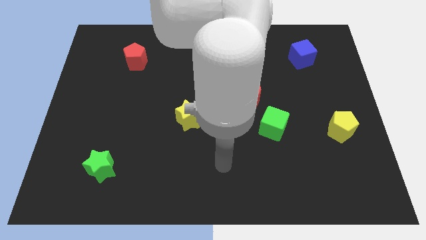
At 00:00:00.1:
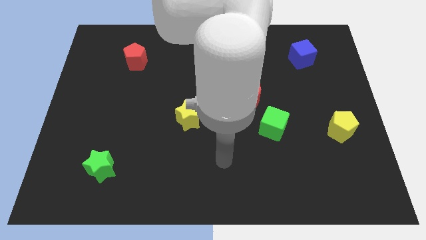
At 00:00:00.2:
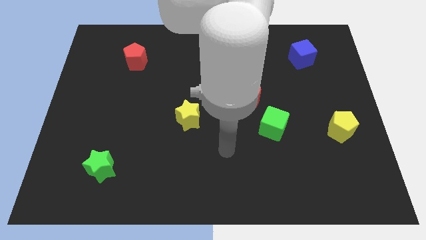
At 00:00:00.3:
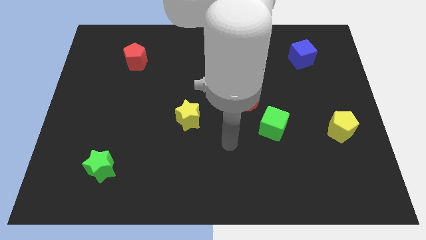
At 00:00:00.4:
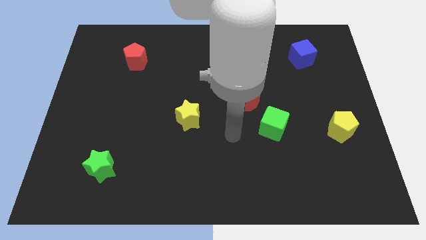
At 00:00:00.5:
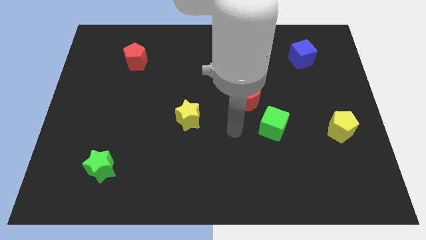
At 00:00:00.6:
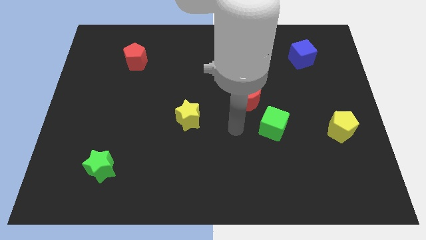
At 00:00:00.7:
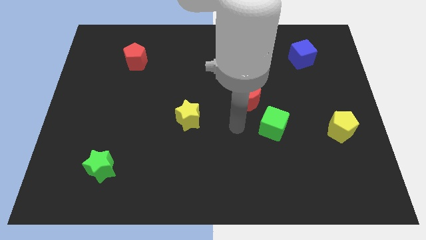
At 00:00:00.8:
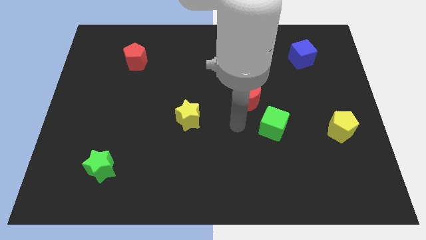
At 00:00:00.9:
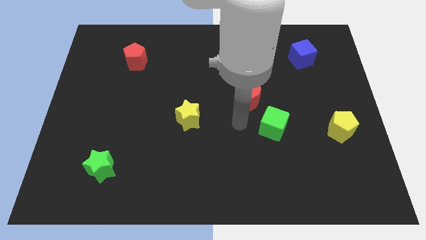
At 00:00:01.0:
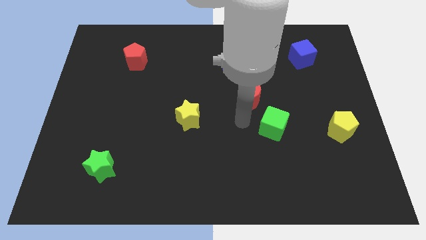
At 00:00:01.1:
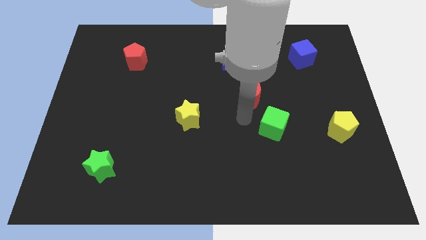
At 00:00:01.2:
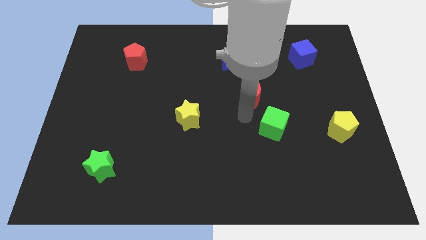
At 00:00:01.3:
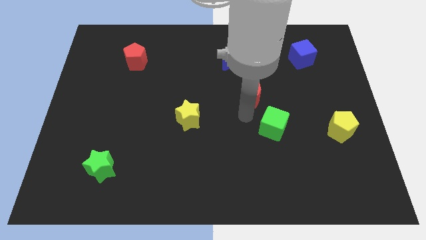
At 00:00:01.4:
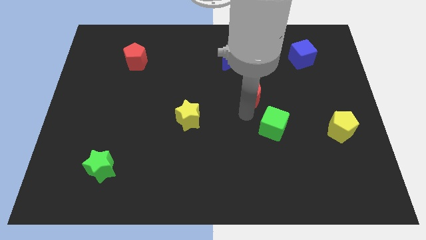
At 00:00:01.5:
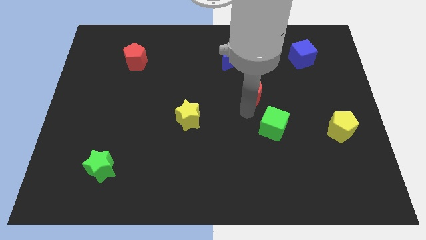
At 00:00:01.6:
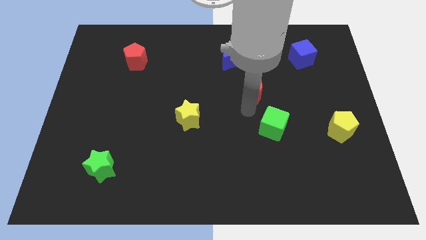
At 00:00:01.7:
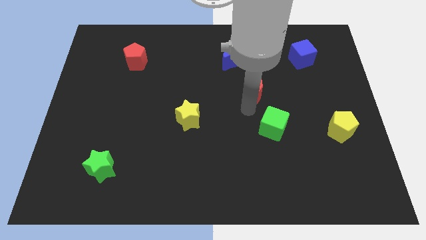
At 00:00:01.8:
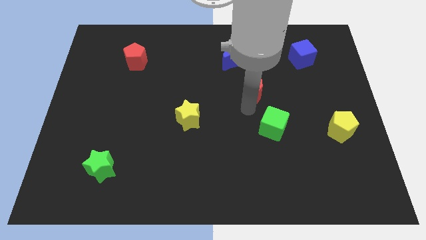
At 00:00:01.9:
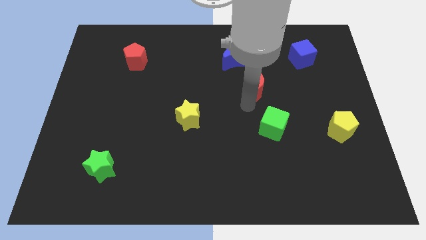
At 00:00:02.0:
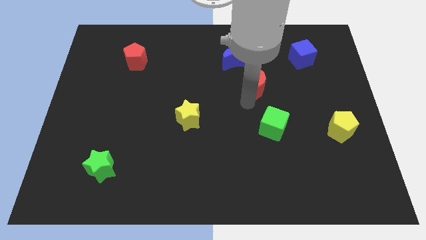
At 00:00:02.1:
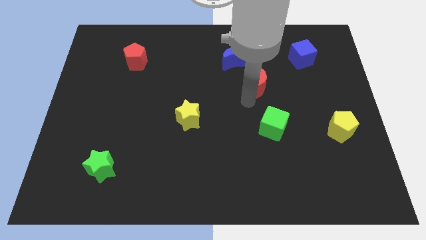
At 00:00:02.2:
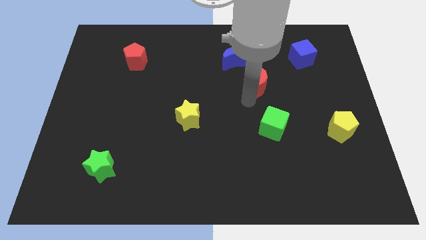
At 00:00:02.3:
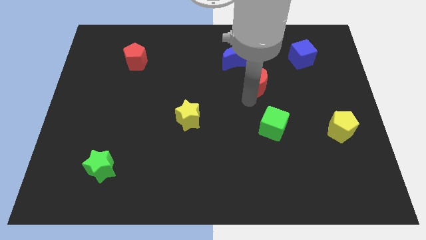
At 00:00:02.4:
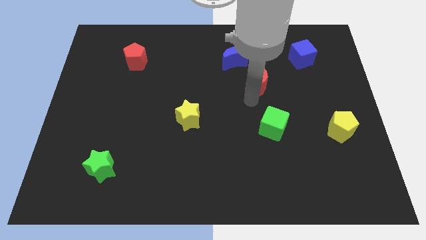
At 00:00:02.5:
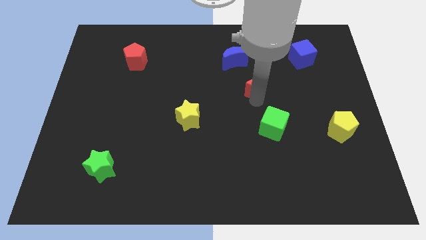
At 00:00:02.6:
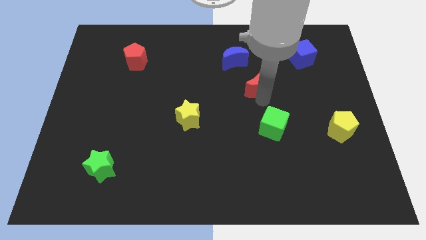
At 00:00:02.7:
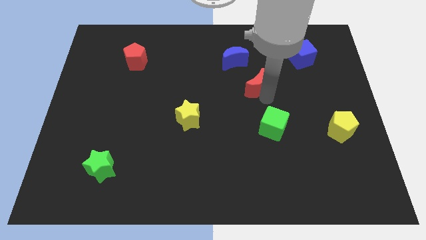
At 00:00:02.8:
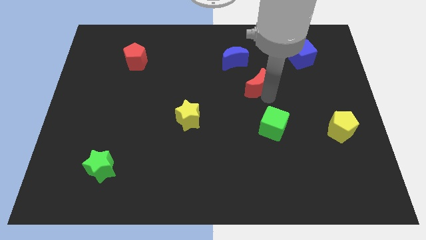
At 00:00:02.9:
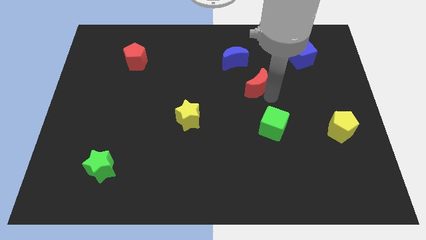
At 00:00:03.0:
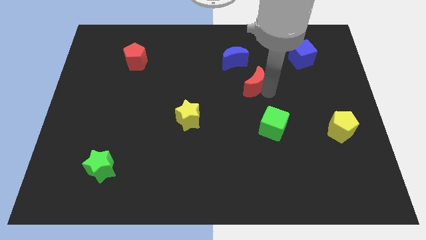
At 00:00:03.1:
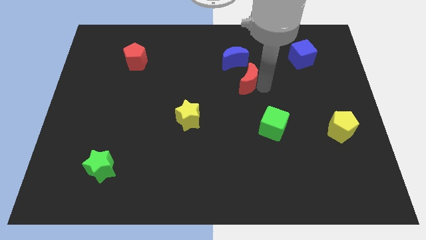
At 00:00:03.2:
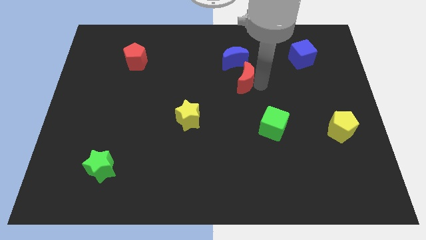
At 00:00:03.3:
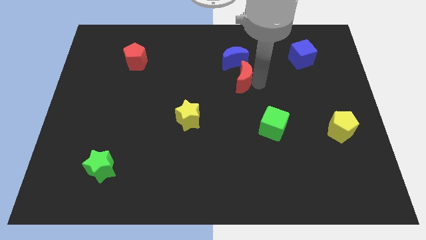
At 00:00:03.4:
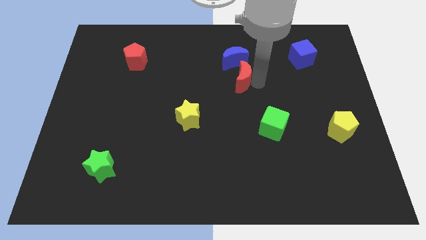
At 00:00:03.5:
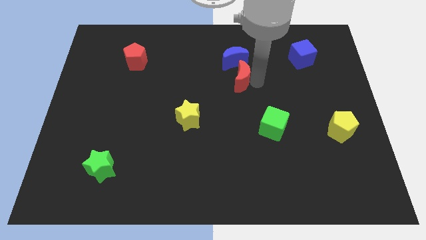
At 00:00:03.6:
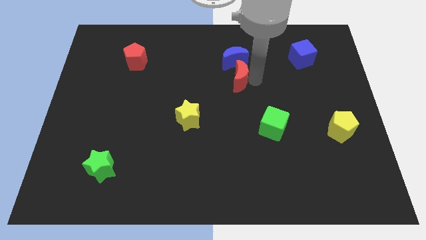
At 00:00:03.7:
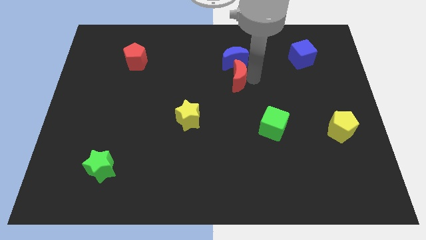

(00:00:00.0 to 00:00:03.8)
slide the red crescent towards the bottom side of the blue crescent

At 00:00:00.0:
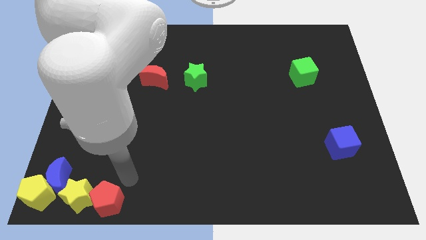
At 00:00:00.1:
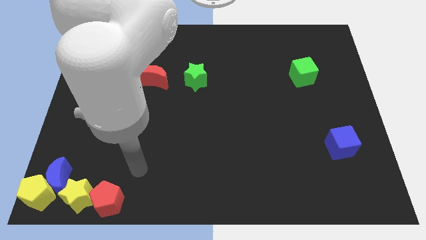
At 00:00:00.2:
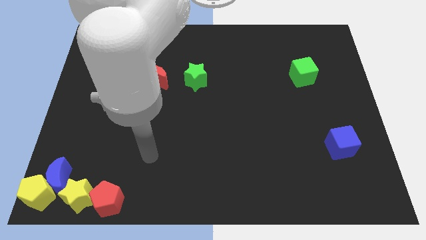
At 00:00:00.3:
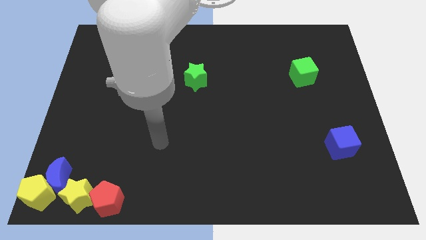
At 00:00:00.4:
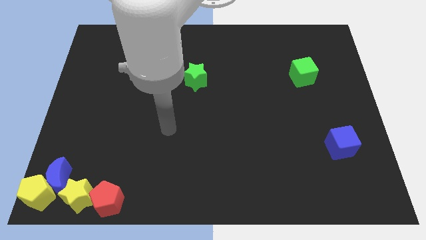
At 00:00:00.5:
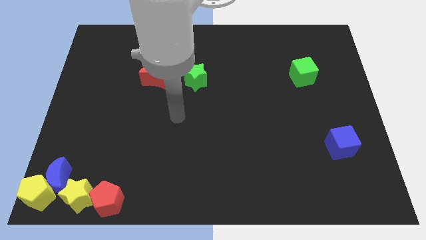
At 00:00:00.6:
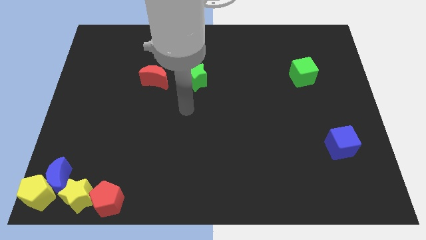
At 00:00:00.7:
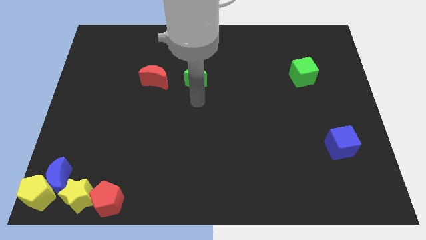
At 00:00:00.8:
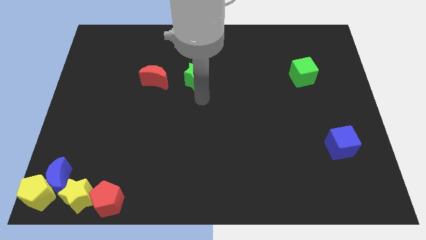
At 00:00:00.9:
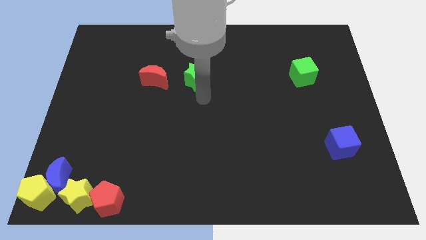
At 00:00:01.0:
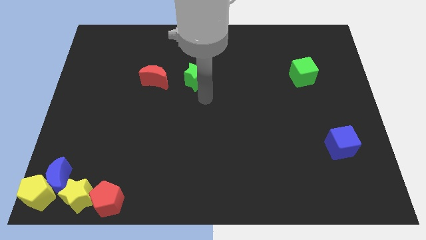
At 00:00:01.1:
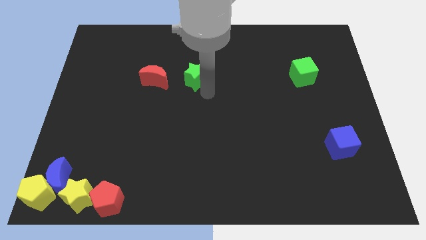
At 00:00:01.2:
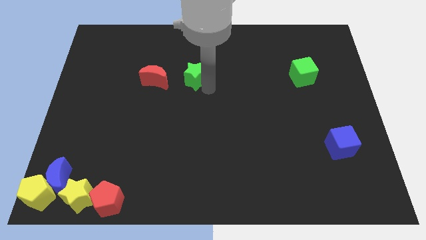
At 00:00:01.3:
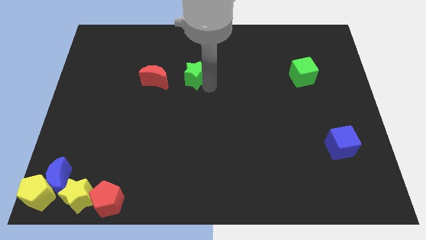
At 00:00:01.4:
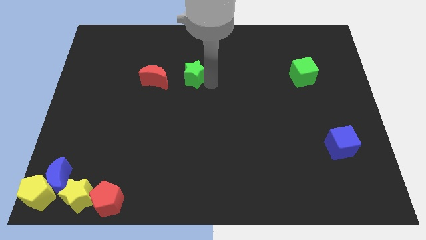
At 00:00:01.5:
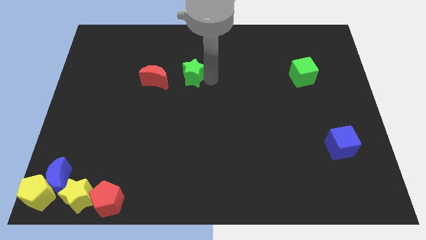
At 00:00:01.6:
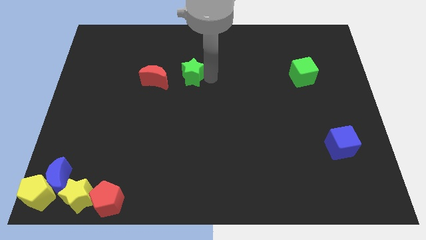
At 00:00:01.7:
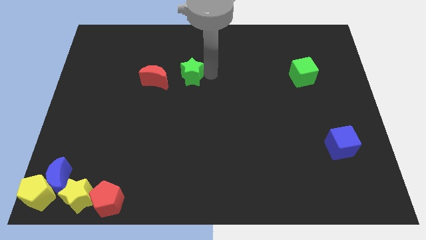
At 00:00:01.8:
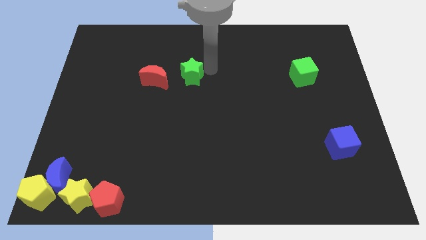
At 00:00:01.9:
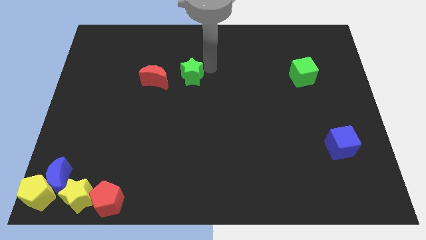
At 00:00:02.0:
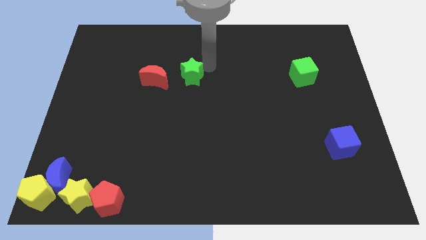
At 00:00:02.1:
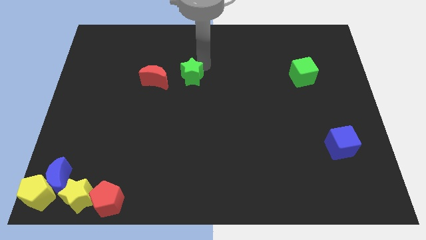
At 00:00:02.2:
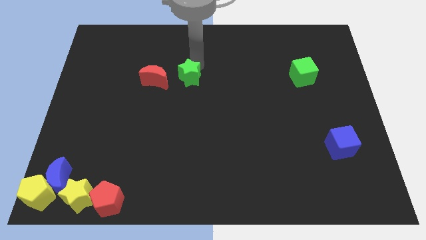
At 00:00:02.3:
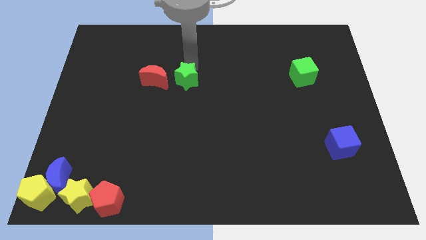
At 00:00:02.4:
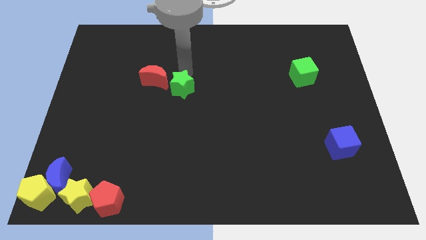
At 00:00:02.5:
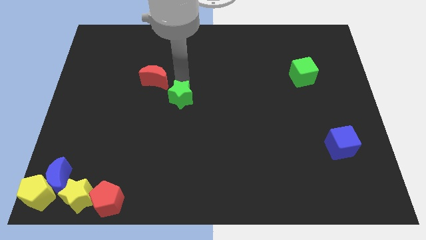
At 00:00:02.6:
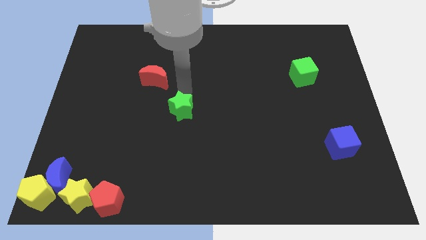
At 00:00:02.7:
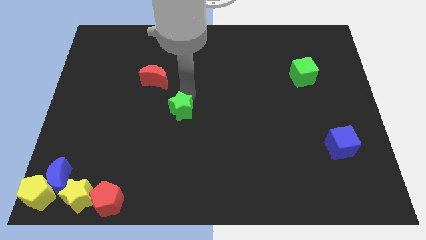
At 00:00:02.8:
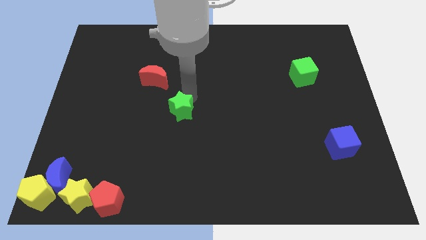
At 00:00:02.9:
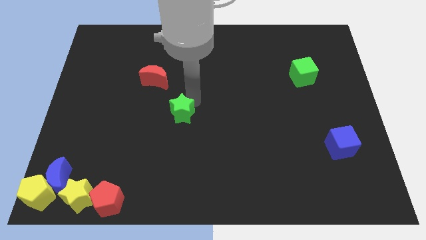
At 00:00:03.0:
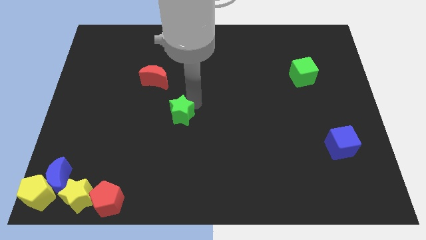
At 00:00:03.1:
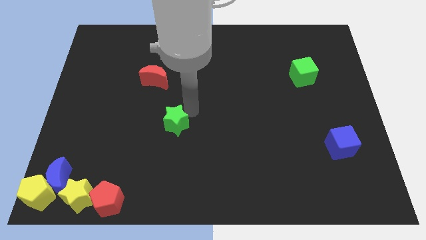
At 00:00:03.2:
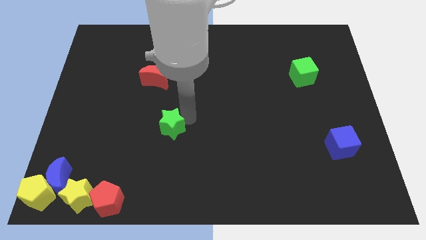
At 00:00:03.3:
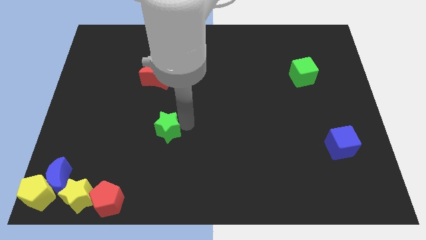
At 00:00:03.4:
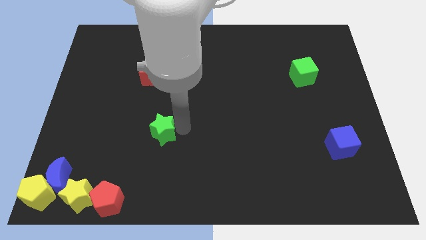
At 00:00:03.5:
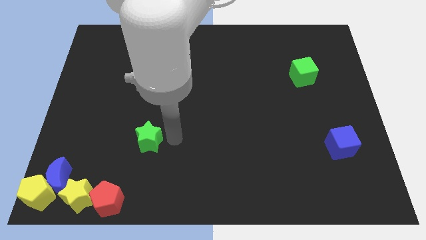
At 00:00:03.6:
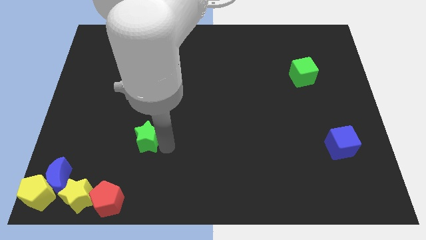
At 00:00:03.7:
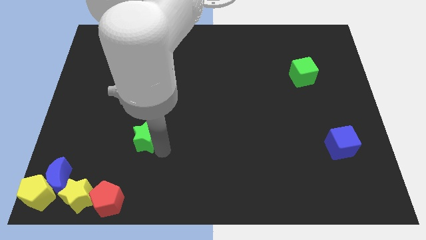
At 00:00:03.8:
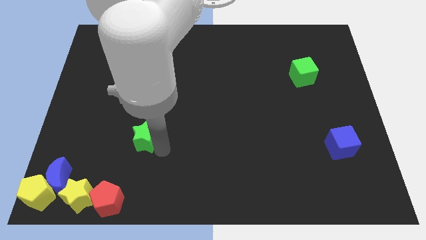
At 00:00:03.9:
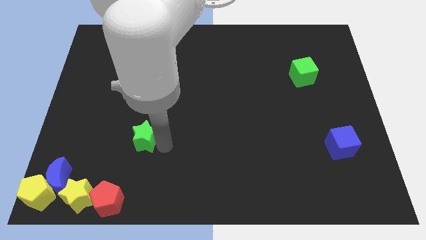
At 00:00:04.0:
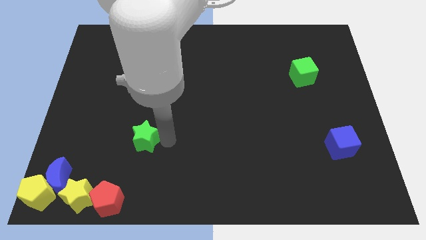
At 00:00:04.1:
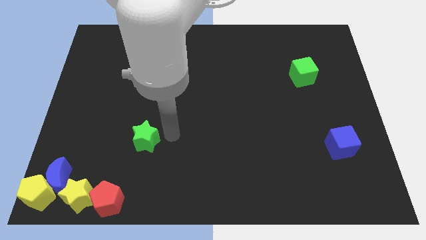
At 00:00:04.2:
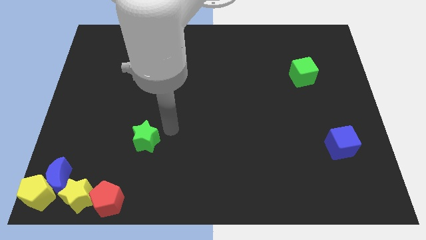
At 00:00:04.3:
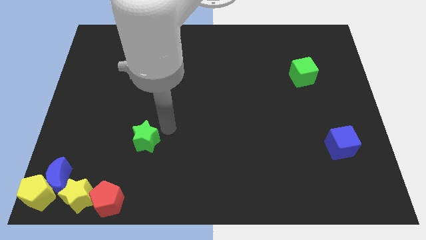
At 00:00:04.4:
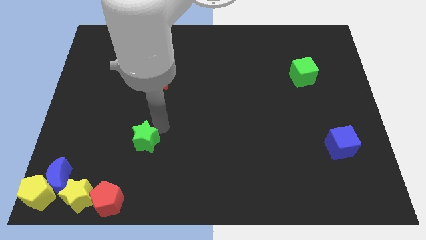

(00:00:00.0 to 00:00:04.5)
move the green star to the bottom side of the red crescent

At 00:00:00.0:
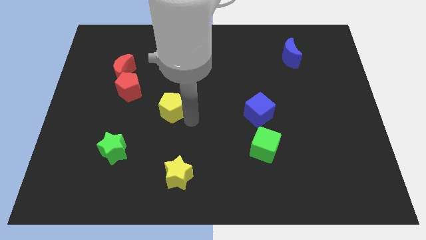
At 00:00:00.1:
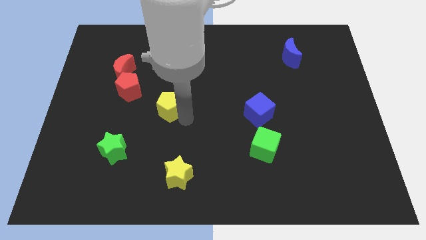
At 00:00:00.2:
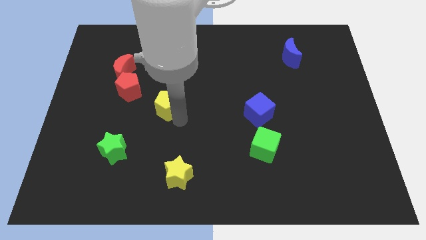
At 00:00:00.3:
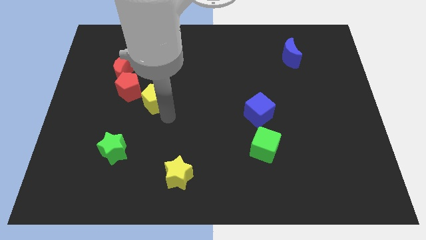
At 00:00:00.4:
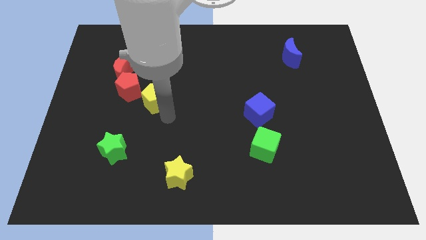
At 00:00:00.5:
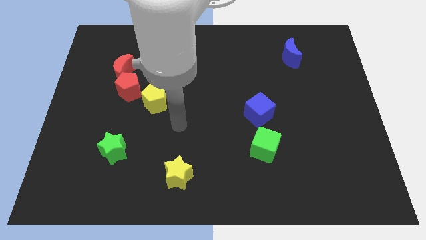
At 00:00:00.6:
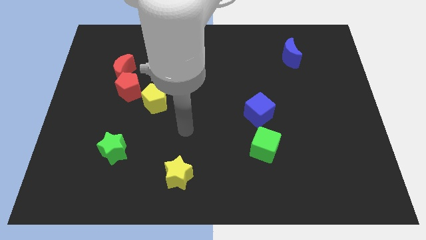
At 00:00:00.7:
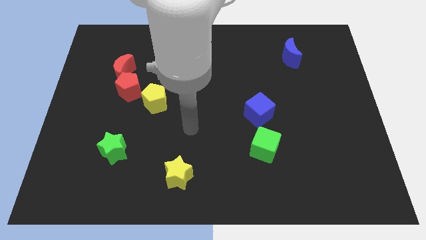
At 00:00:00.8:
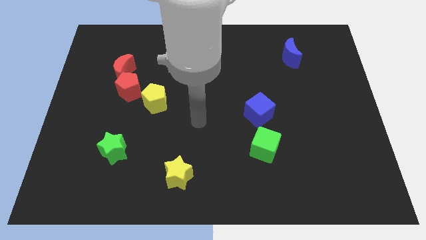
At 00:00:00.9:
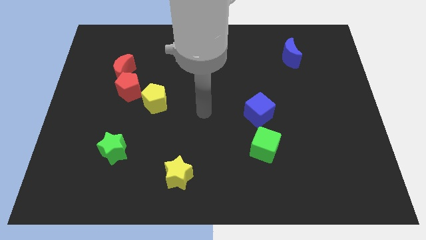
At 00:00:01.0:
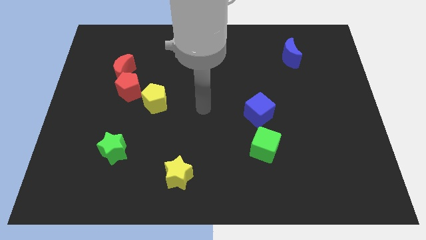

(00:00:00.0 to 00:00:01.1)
place yellow pentagon beside red pentagon
